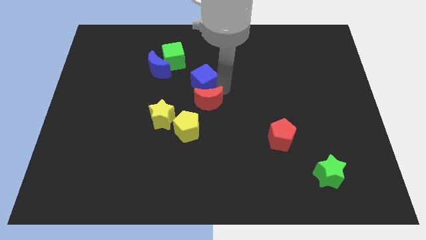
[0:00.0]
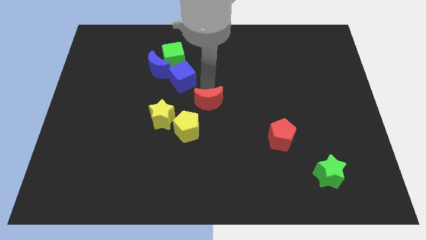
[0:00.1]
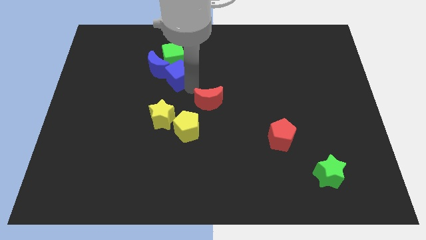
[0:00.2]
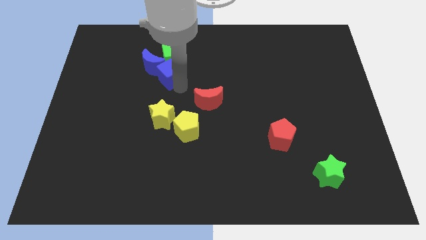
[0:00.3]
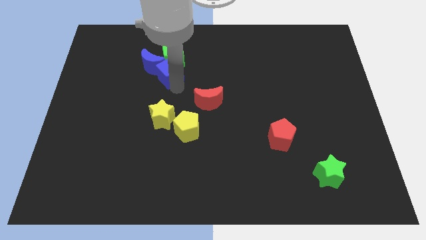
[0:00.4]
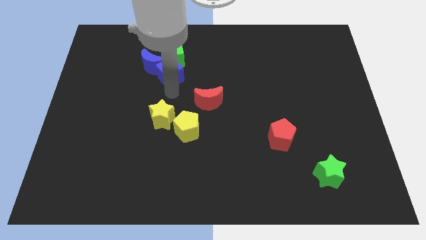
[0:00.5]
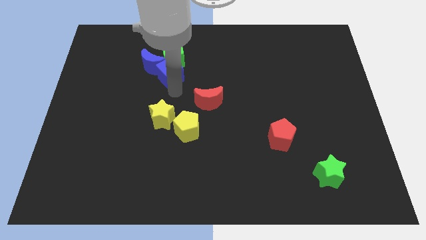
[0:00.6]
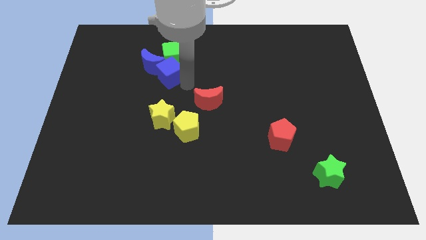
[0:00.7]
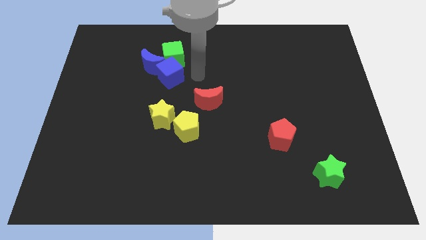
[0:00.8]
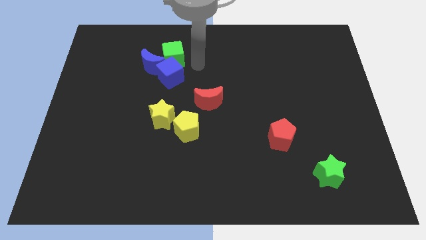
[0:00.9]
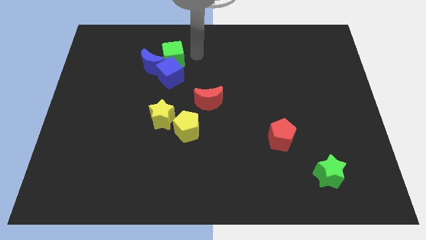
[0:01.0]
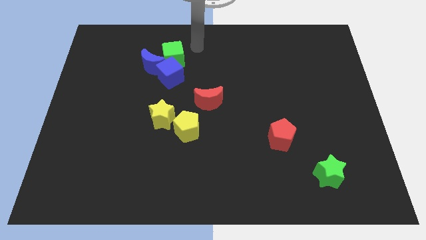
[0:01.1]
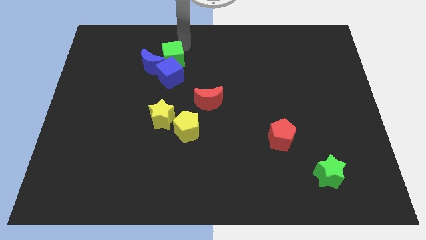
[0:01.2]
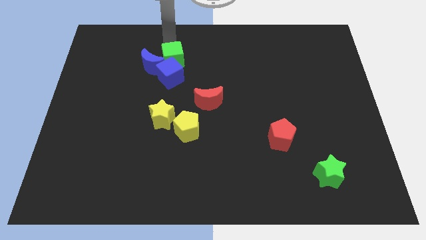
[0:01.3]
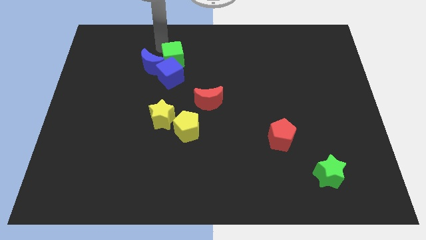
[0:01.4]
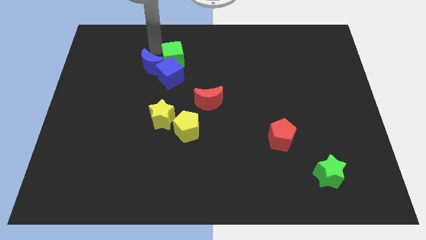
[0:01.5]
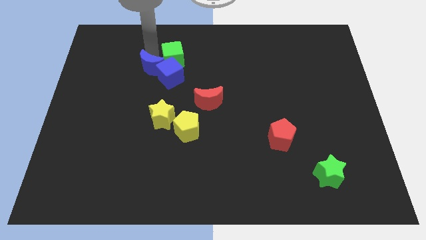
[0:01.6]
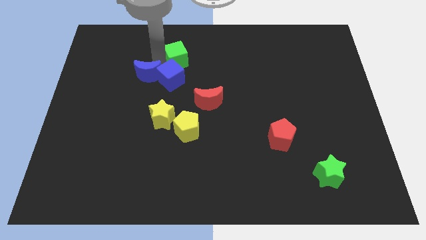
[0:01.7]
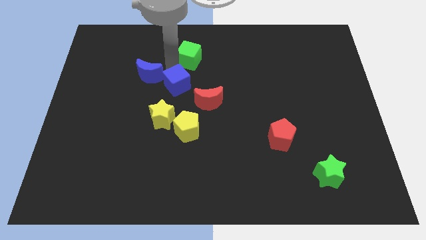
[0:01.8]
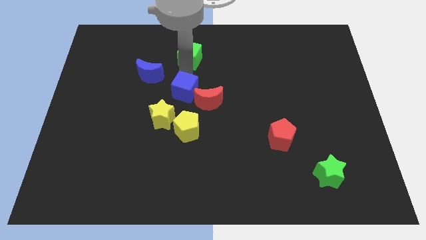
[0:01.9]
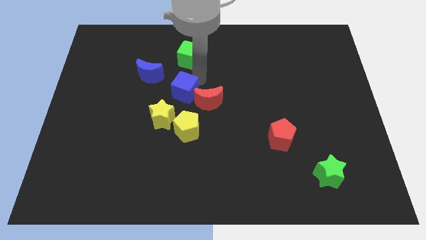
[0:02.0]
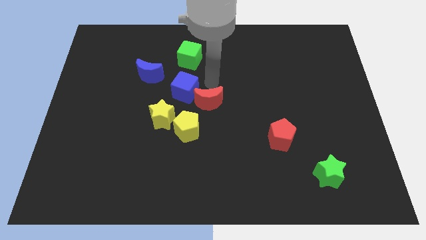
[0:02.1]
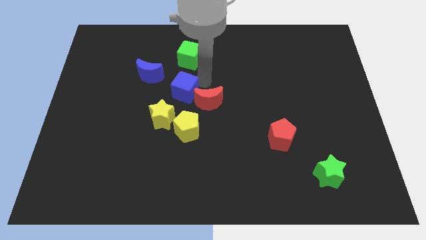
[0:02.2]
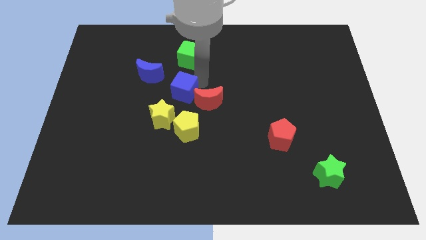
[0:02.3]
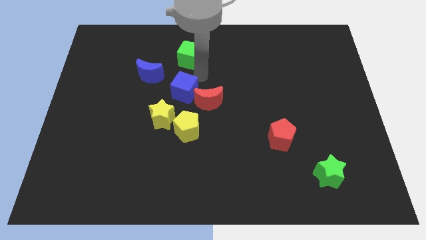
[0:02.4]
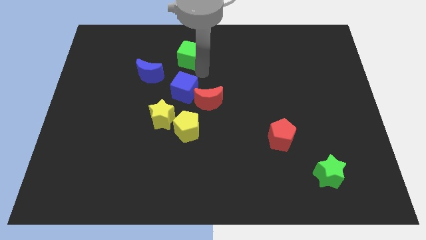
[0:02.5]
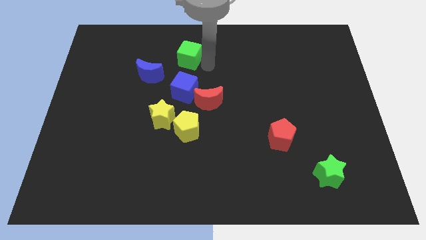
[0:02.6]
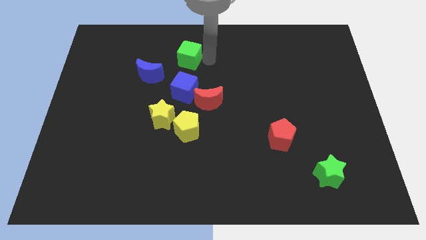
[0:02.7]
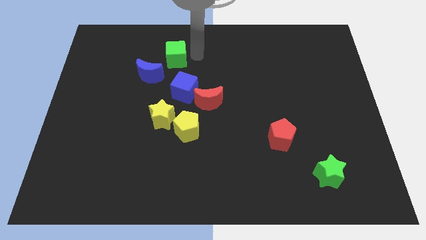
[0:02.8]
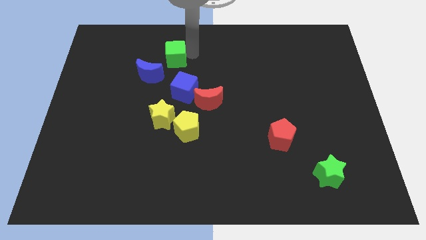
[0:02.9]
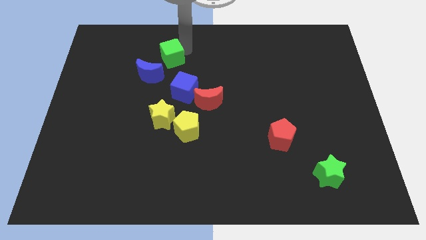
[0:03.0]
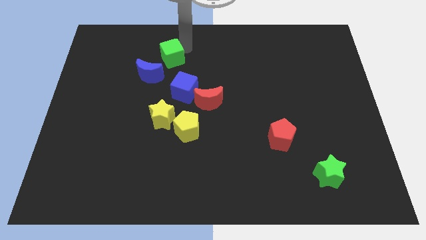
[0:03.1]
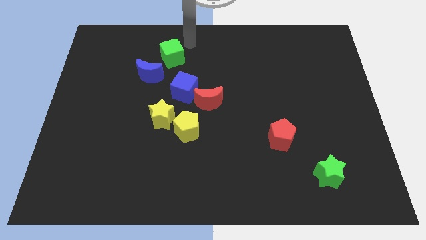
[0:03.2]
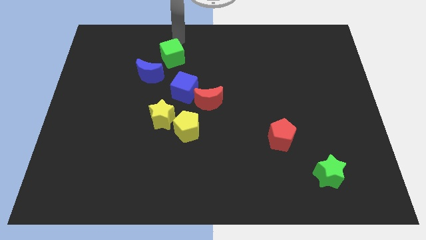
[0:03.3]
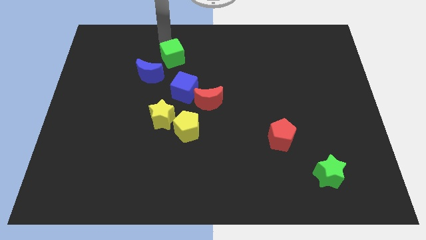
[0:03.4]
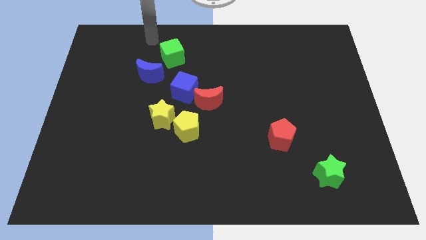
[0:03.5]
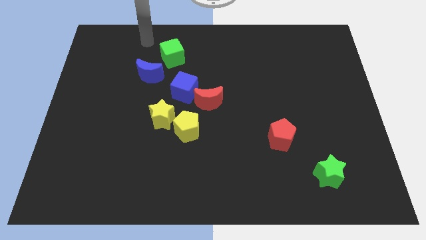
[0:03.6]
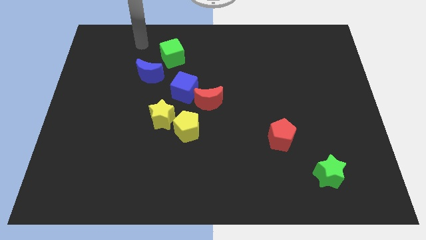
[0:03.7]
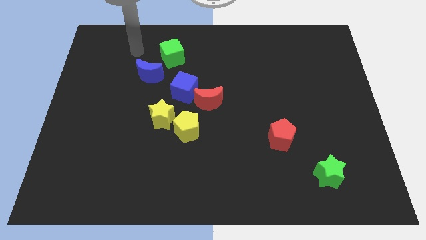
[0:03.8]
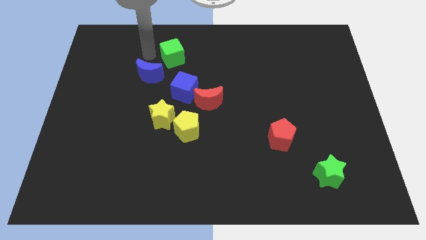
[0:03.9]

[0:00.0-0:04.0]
place the blue cube in between the red crescent and blue crescent
